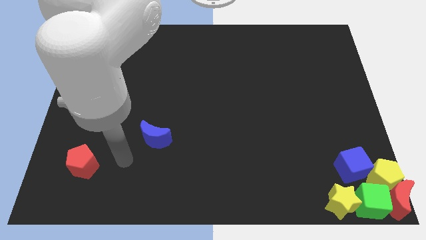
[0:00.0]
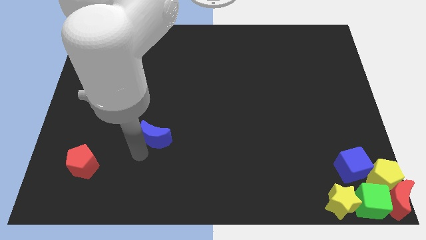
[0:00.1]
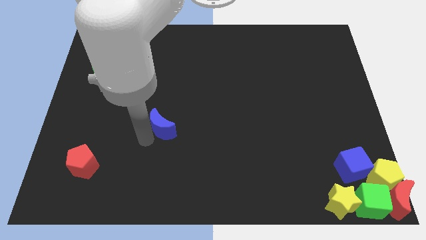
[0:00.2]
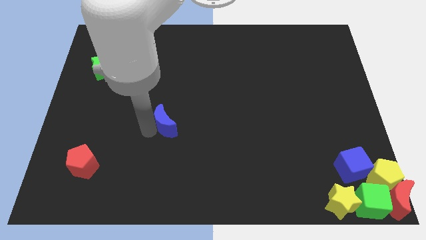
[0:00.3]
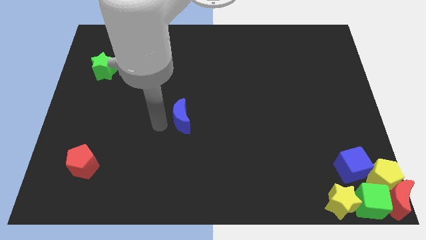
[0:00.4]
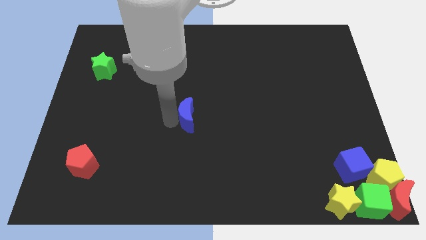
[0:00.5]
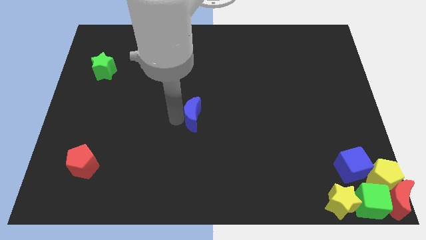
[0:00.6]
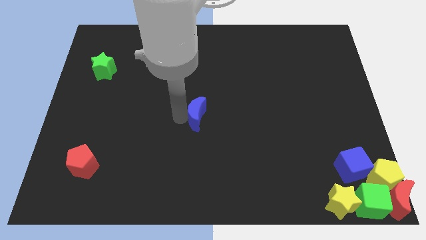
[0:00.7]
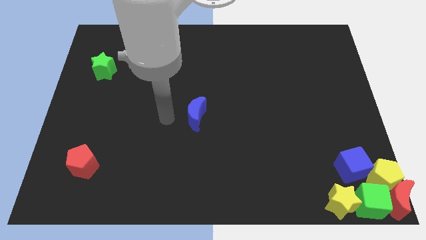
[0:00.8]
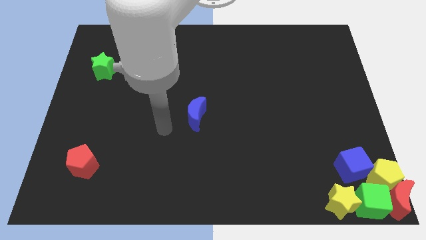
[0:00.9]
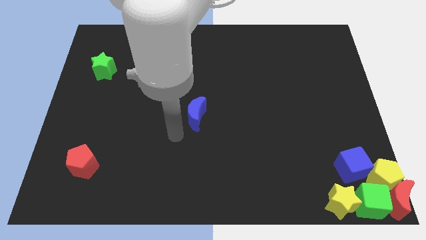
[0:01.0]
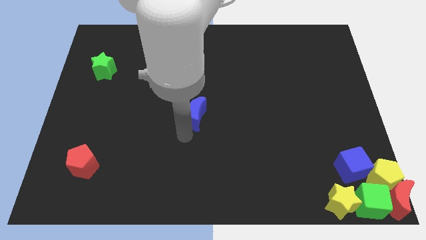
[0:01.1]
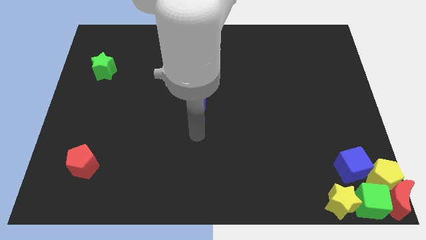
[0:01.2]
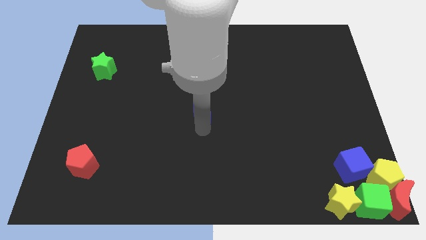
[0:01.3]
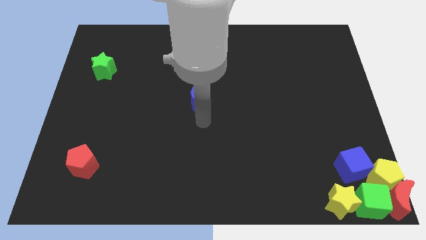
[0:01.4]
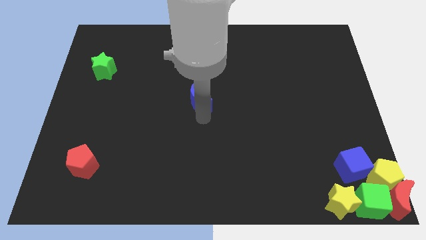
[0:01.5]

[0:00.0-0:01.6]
place the blue moon at the center of the board

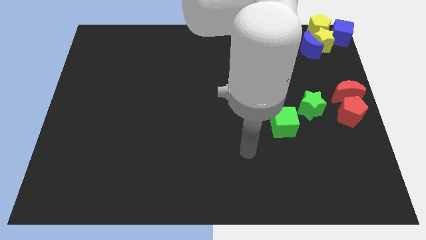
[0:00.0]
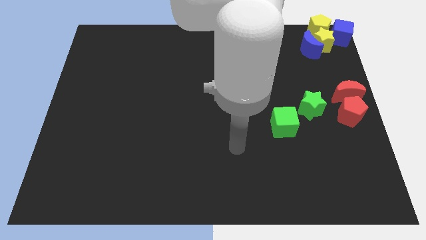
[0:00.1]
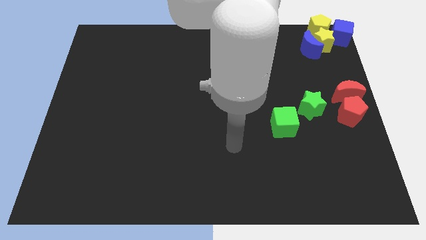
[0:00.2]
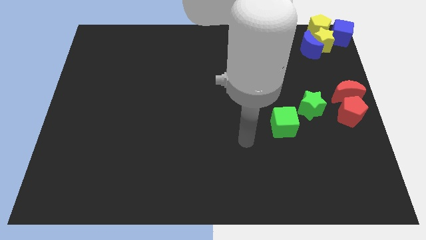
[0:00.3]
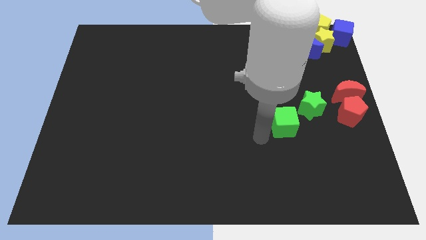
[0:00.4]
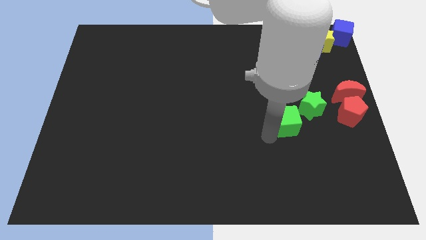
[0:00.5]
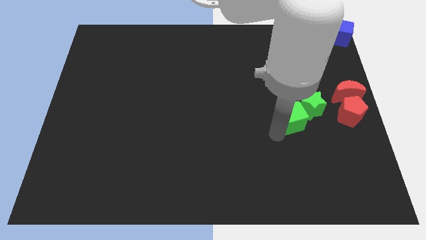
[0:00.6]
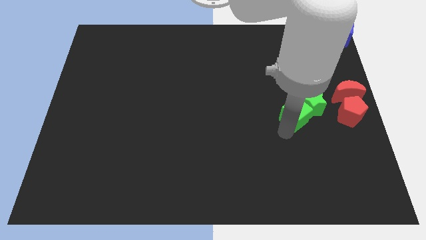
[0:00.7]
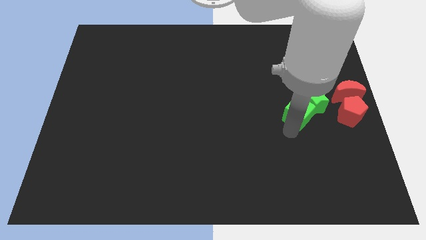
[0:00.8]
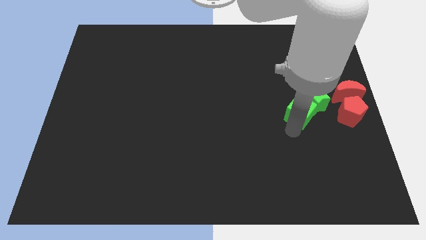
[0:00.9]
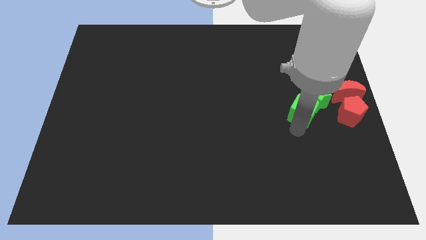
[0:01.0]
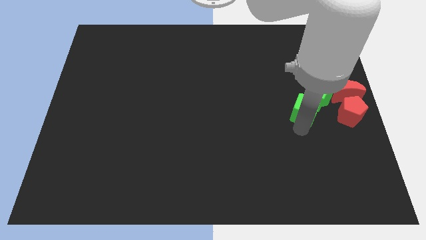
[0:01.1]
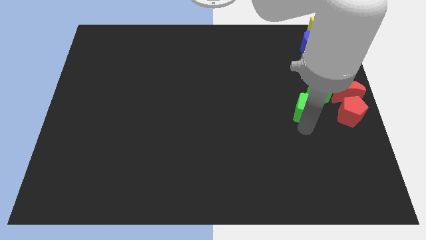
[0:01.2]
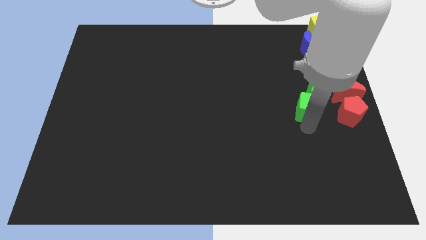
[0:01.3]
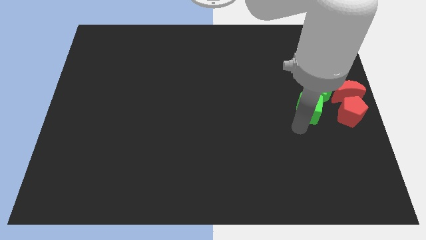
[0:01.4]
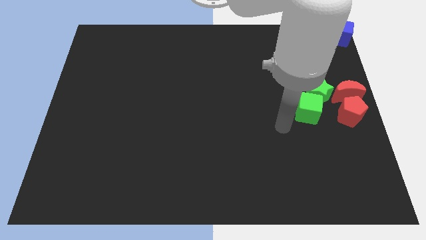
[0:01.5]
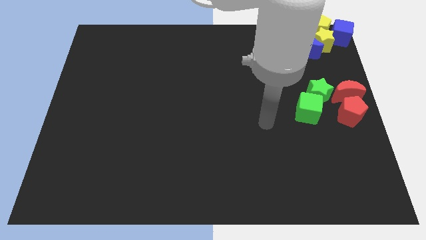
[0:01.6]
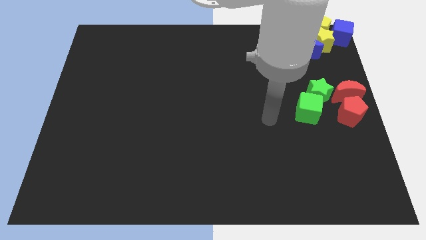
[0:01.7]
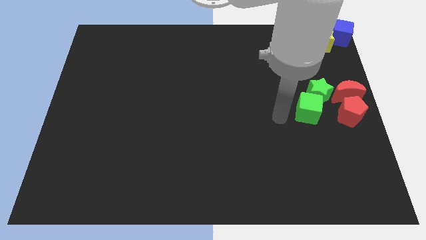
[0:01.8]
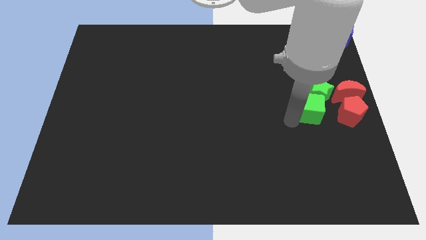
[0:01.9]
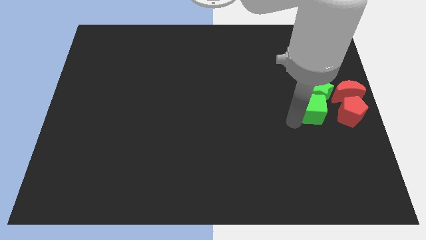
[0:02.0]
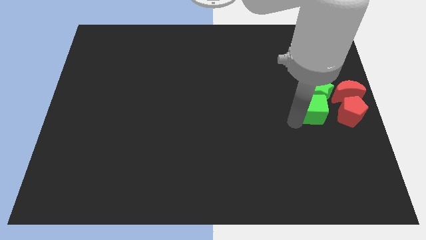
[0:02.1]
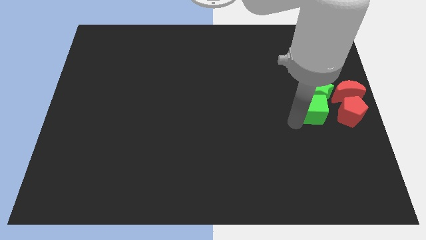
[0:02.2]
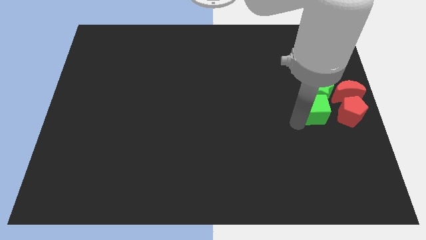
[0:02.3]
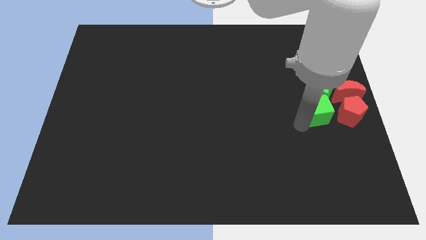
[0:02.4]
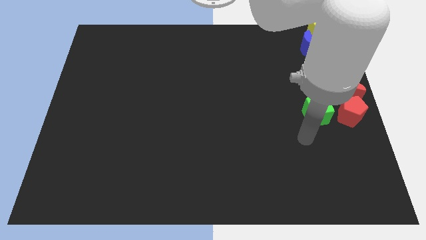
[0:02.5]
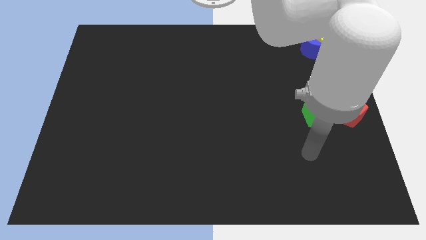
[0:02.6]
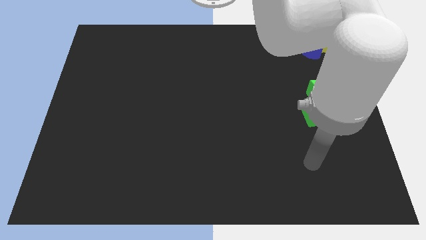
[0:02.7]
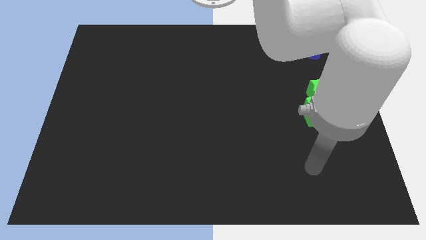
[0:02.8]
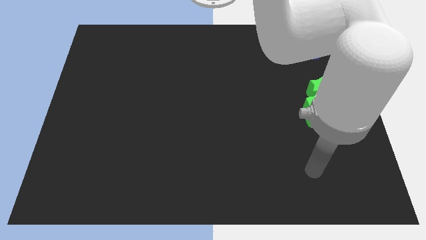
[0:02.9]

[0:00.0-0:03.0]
push green star into green cube

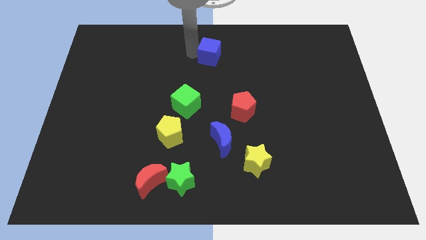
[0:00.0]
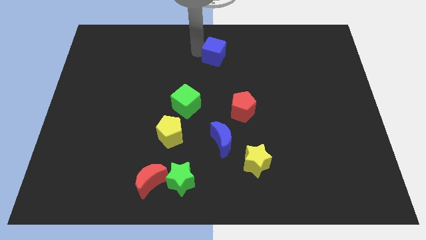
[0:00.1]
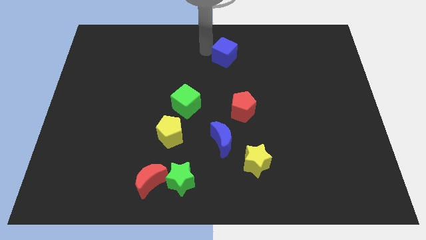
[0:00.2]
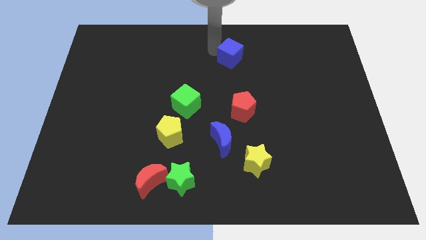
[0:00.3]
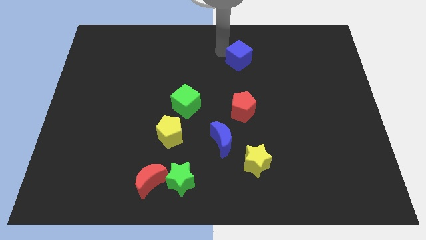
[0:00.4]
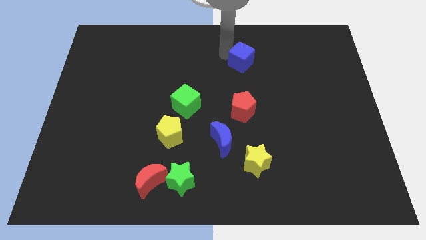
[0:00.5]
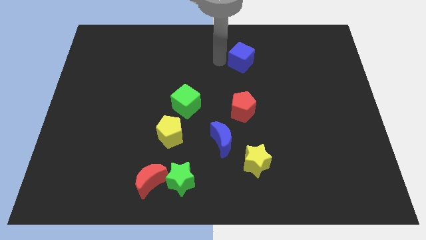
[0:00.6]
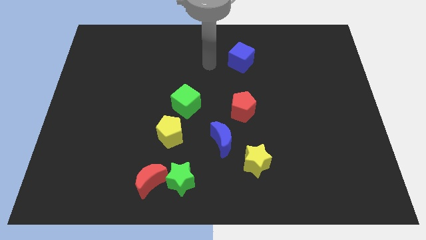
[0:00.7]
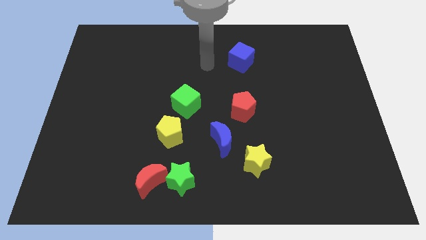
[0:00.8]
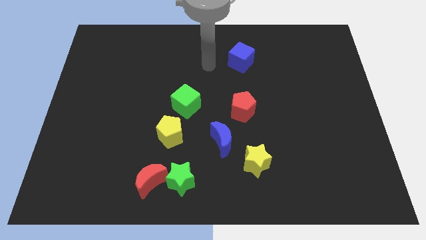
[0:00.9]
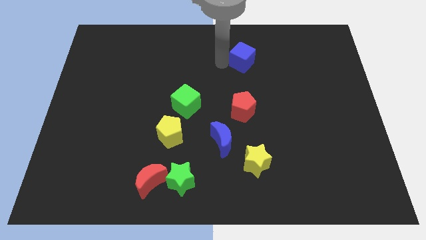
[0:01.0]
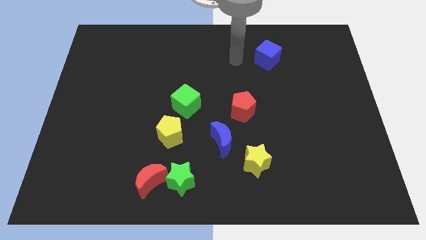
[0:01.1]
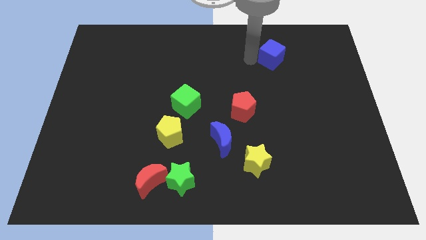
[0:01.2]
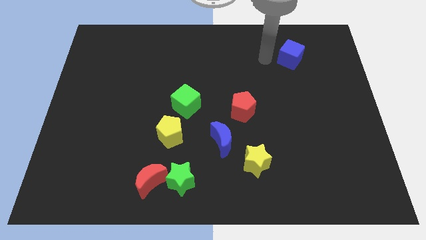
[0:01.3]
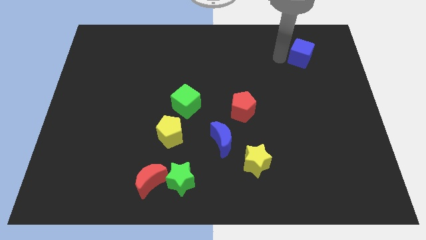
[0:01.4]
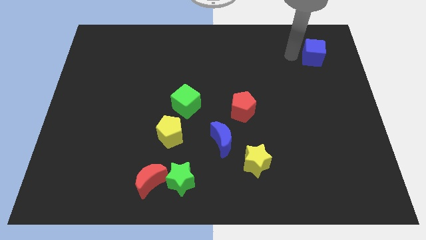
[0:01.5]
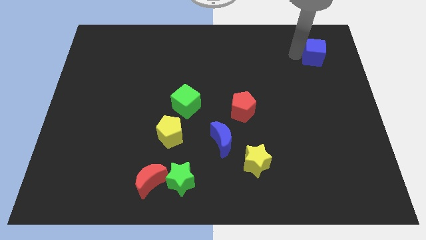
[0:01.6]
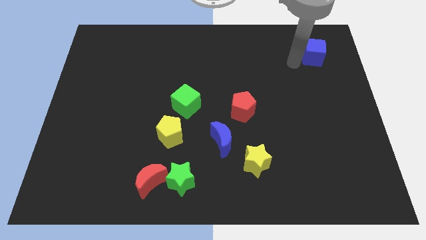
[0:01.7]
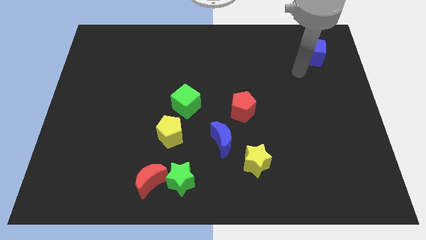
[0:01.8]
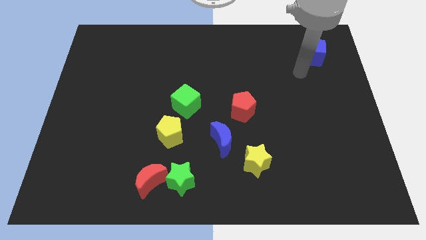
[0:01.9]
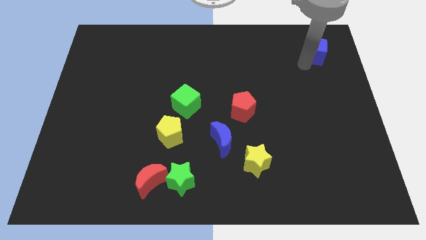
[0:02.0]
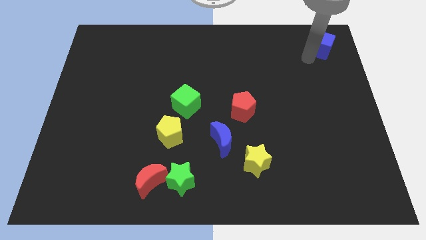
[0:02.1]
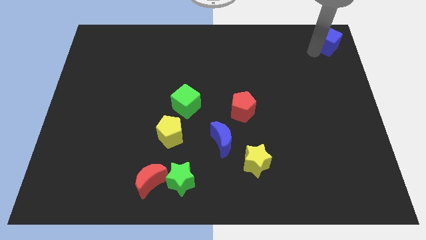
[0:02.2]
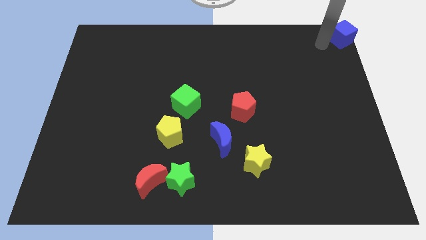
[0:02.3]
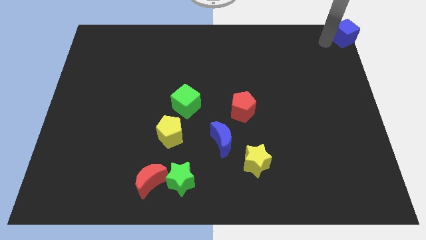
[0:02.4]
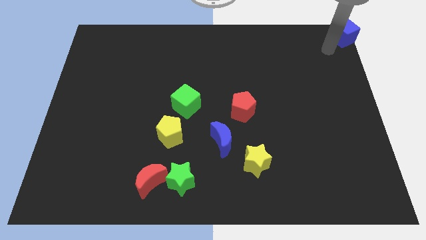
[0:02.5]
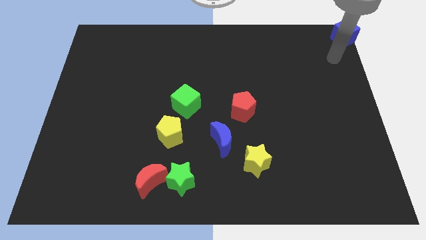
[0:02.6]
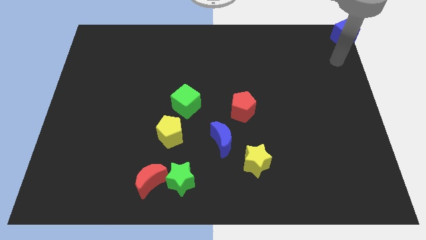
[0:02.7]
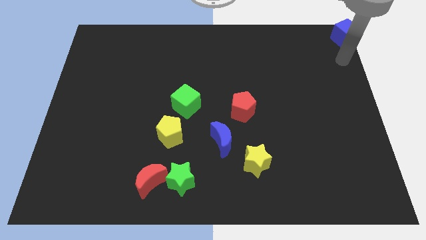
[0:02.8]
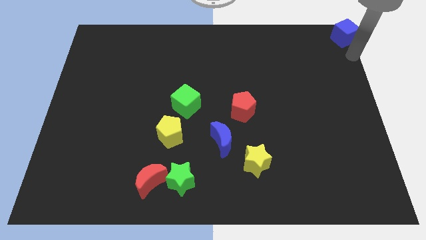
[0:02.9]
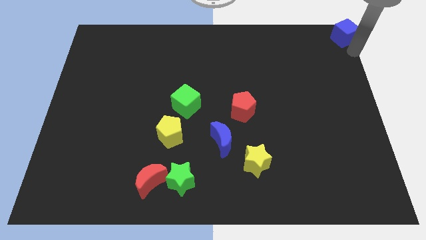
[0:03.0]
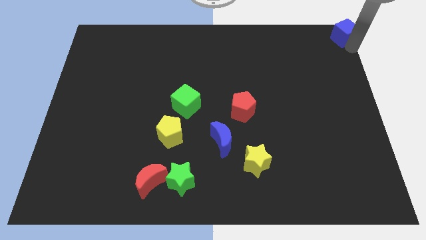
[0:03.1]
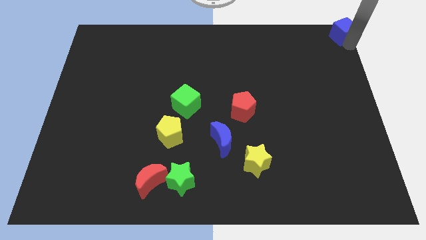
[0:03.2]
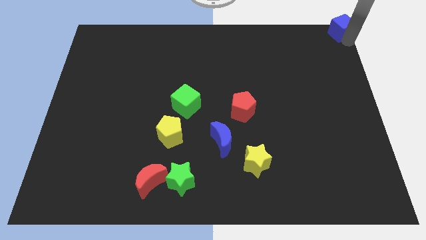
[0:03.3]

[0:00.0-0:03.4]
push the blue cube to the top right corner of the board

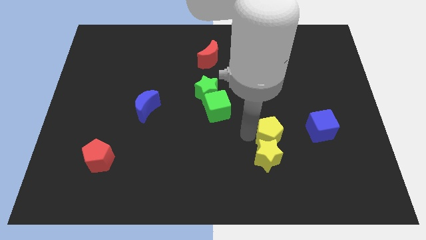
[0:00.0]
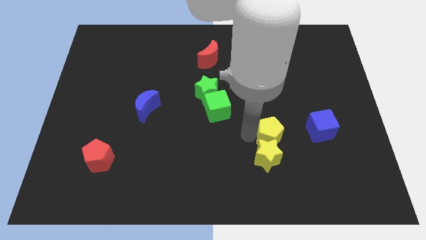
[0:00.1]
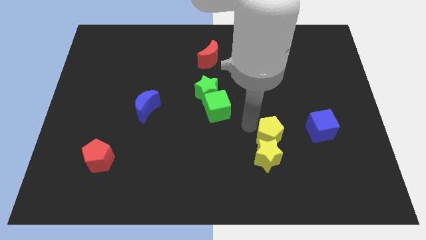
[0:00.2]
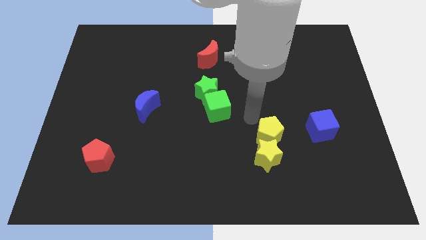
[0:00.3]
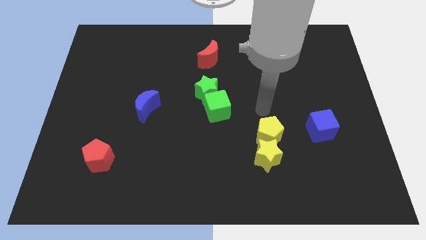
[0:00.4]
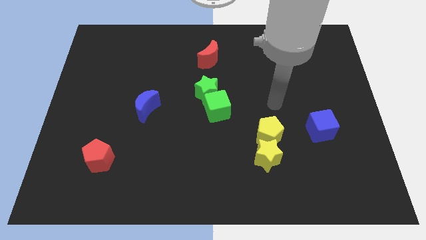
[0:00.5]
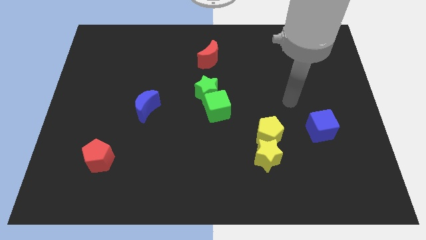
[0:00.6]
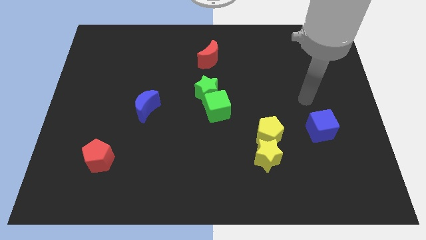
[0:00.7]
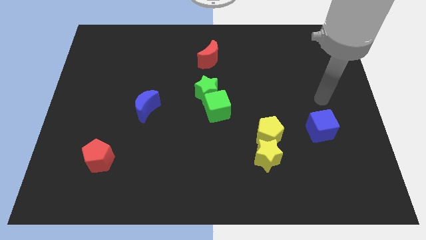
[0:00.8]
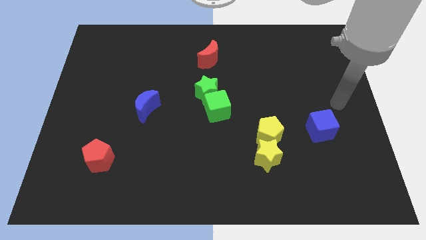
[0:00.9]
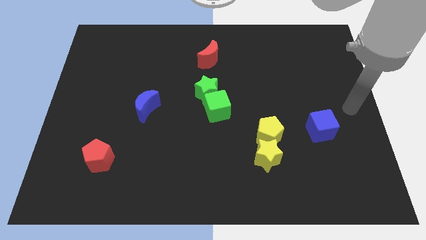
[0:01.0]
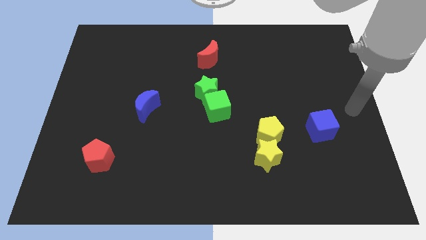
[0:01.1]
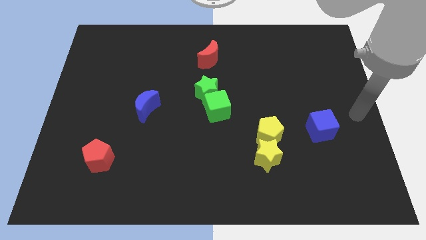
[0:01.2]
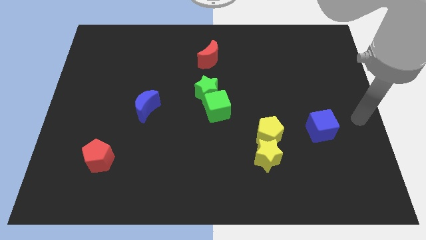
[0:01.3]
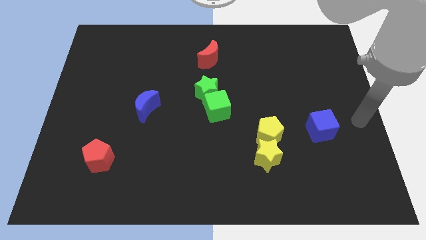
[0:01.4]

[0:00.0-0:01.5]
move your arm away from the yellow pentagon
